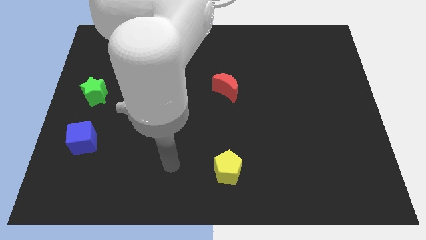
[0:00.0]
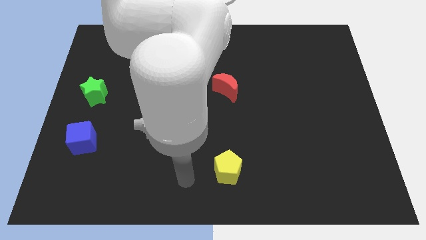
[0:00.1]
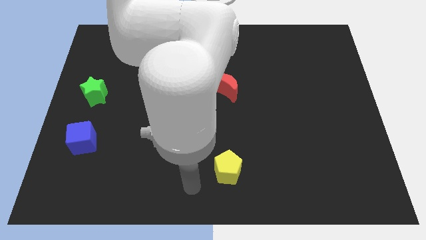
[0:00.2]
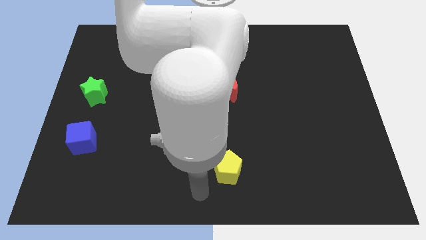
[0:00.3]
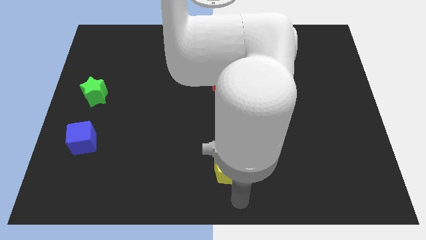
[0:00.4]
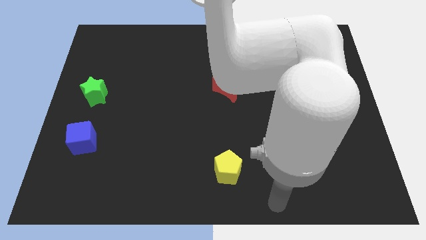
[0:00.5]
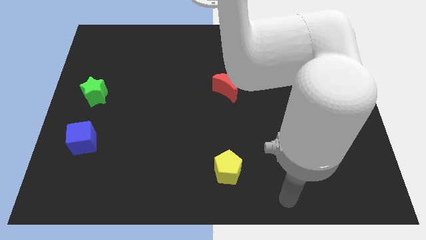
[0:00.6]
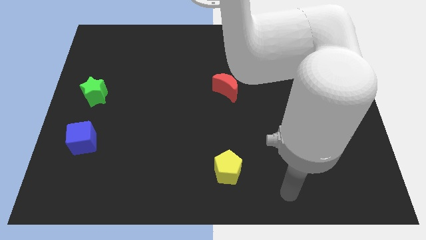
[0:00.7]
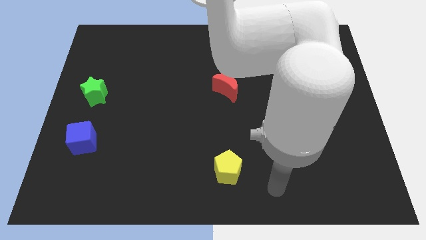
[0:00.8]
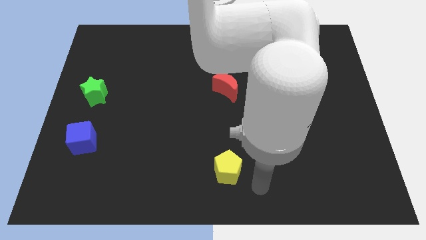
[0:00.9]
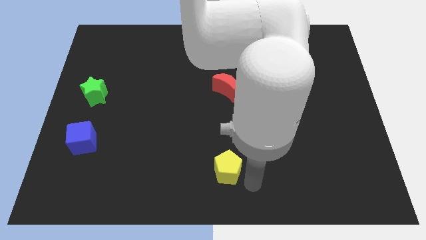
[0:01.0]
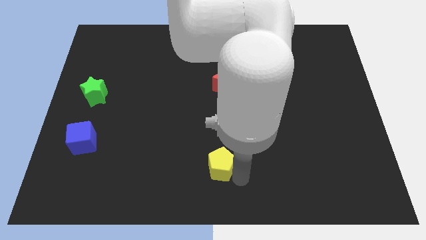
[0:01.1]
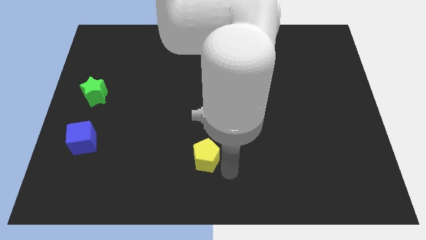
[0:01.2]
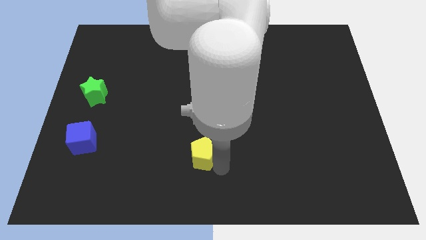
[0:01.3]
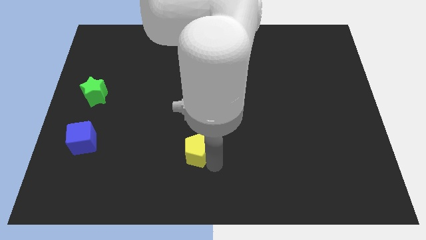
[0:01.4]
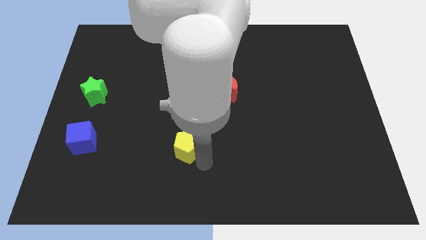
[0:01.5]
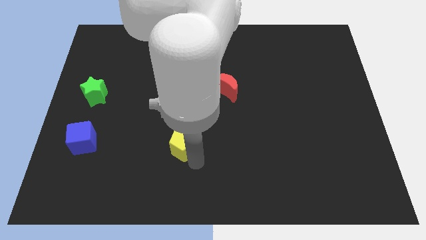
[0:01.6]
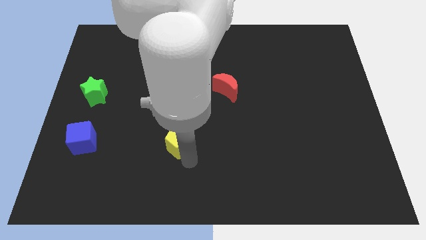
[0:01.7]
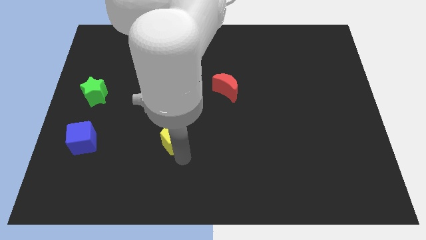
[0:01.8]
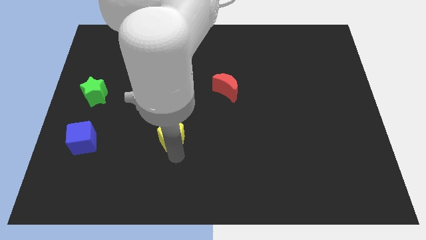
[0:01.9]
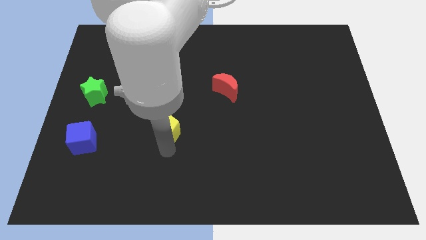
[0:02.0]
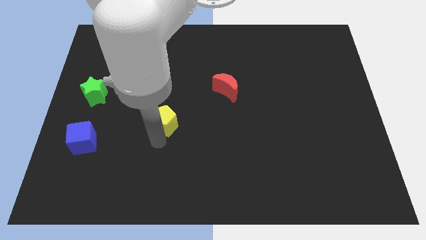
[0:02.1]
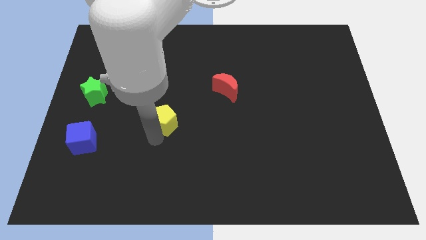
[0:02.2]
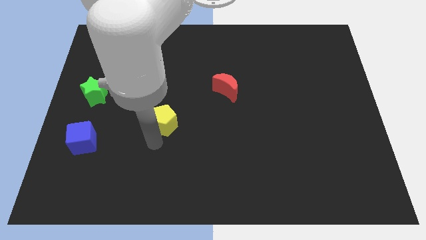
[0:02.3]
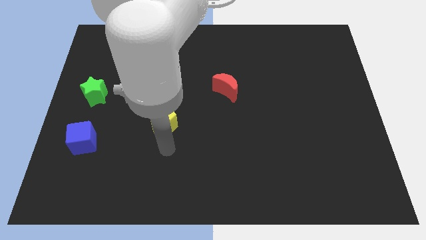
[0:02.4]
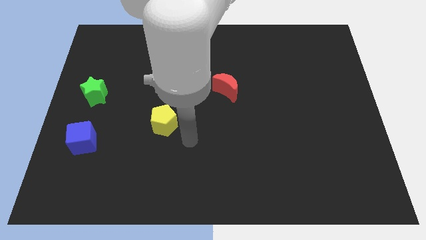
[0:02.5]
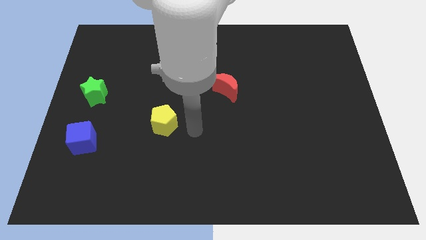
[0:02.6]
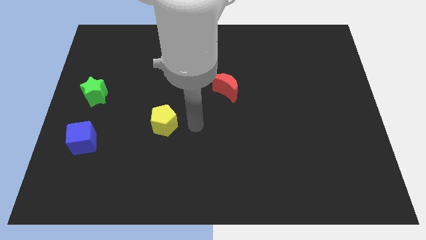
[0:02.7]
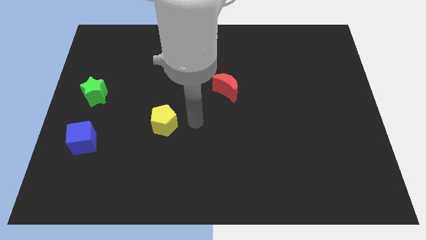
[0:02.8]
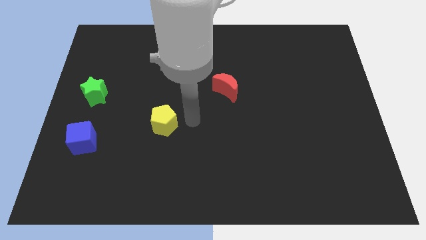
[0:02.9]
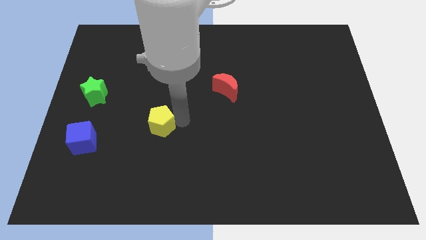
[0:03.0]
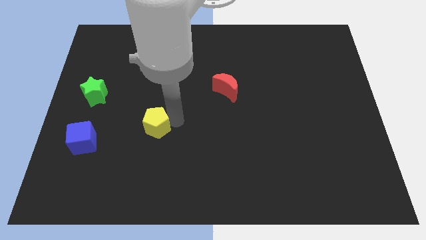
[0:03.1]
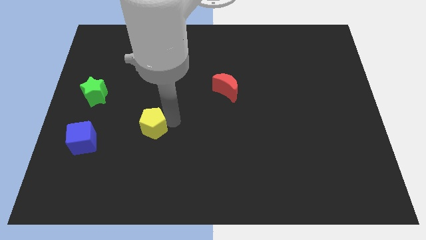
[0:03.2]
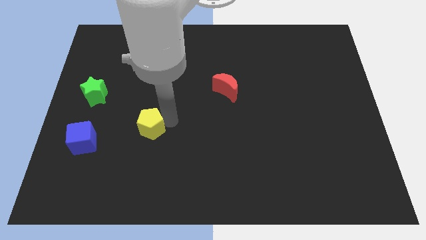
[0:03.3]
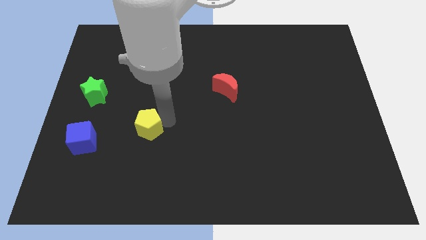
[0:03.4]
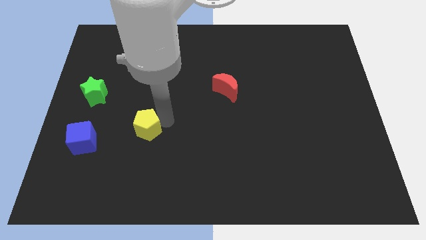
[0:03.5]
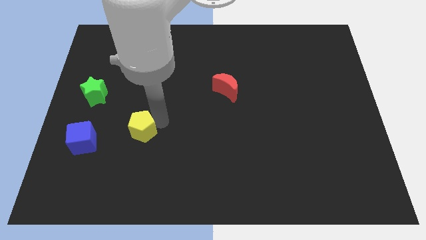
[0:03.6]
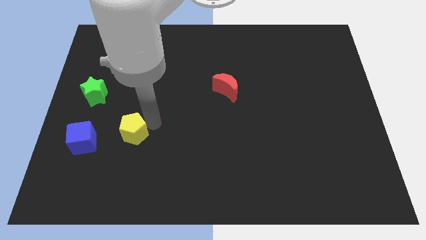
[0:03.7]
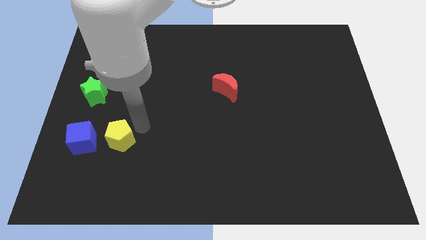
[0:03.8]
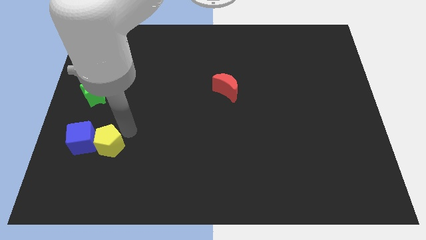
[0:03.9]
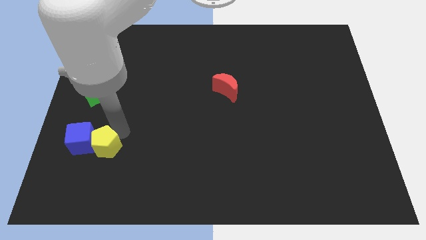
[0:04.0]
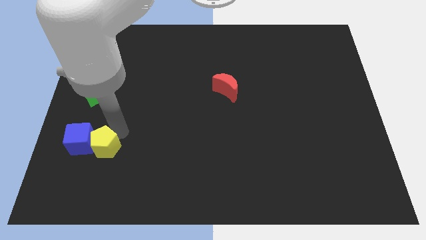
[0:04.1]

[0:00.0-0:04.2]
move the yellow block to the blue cube

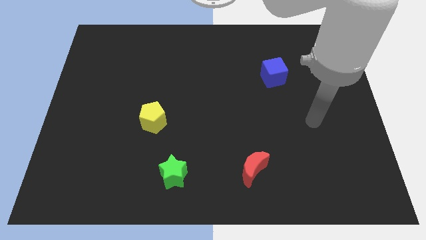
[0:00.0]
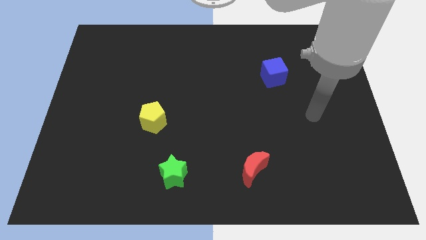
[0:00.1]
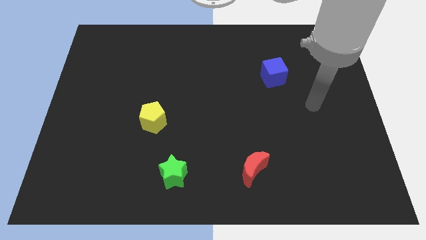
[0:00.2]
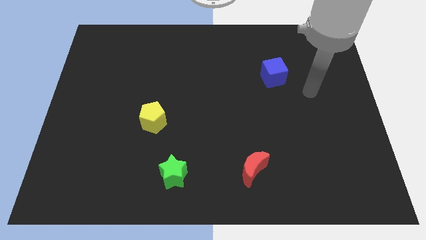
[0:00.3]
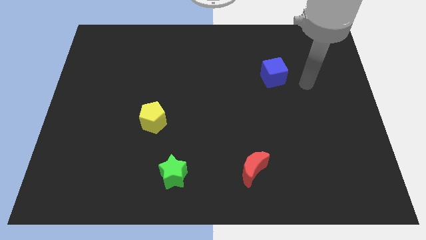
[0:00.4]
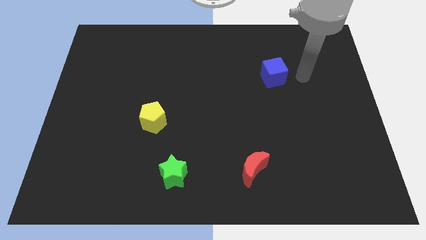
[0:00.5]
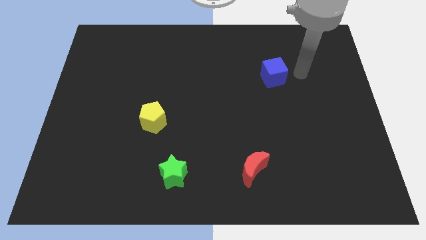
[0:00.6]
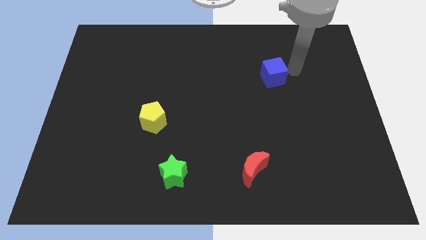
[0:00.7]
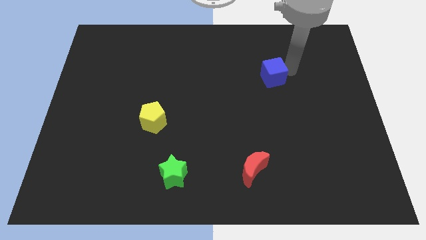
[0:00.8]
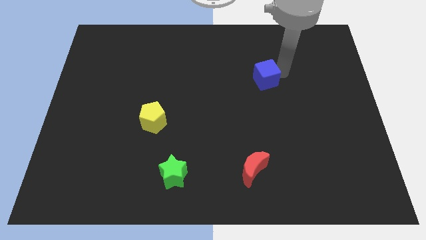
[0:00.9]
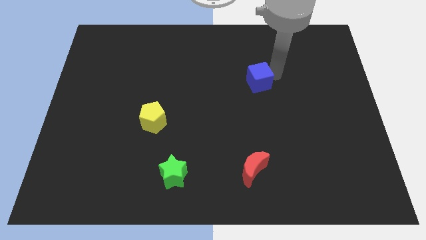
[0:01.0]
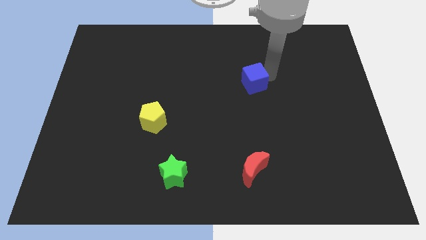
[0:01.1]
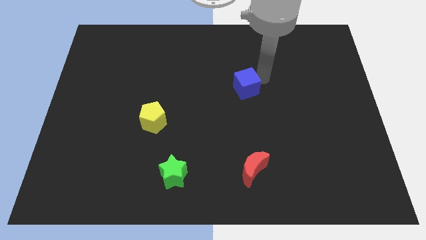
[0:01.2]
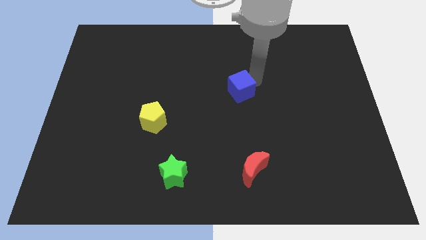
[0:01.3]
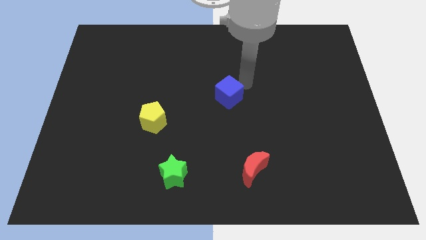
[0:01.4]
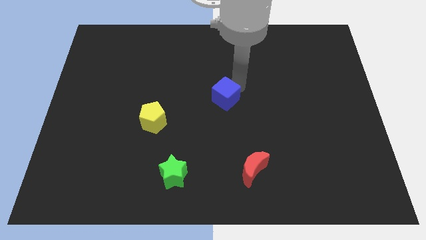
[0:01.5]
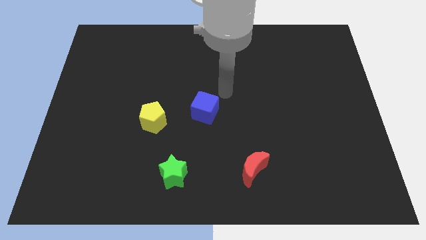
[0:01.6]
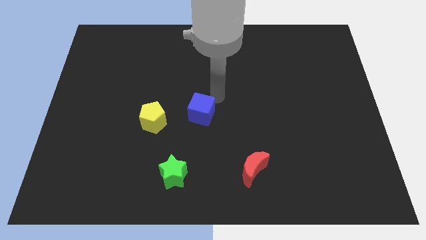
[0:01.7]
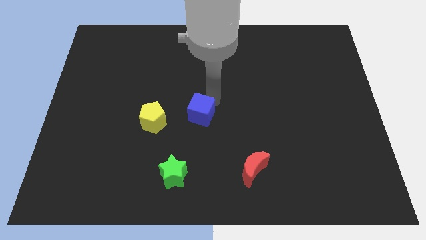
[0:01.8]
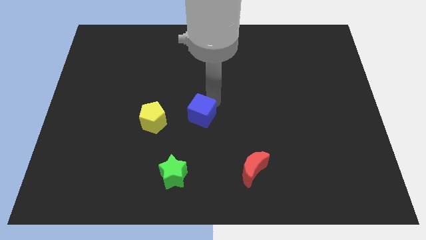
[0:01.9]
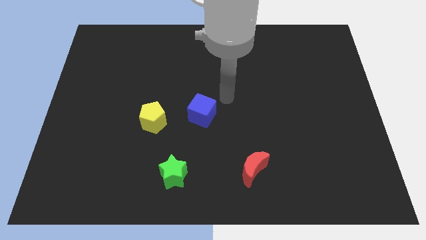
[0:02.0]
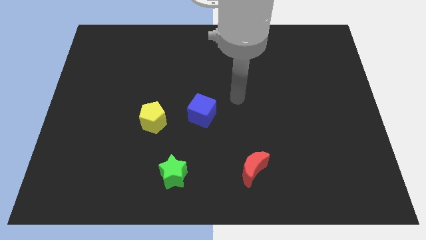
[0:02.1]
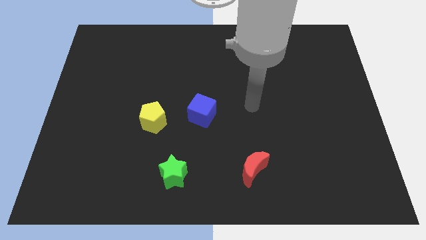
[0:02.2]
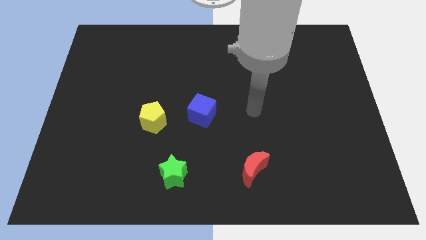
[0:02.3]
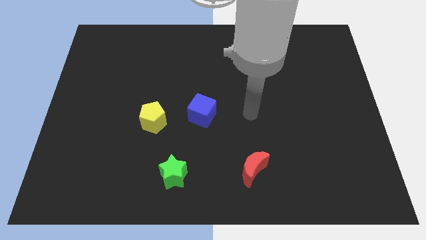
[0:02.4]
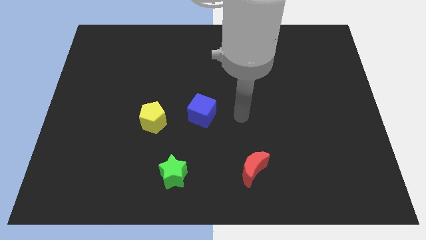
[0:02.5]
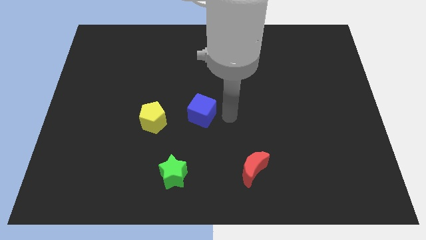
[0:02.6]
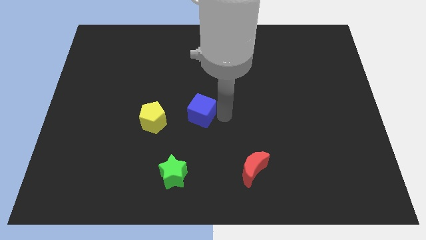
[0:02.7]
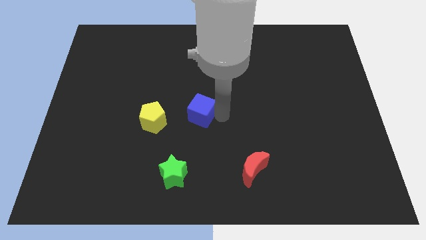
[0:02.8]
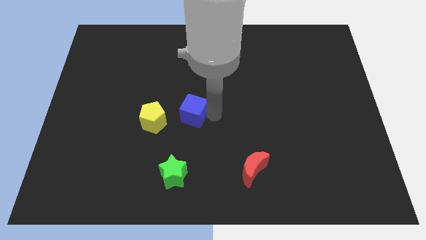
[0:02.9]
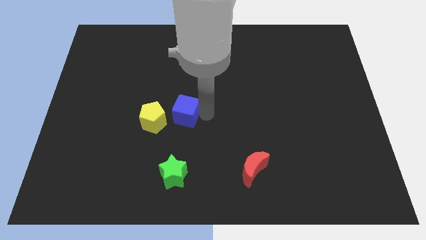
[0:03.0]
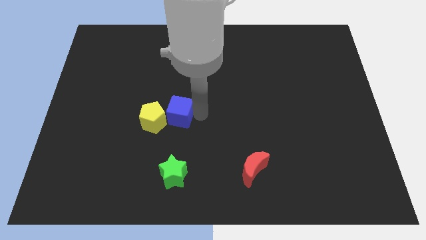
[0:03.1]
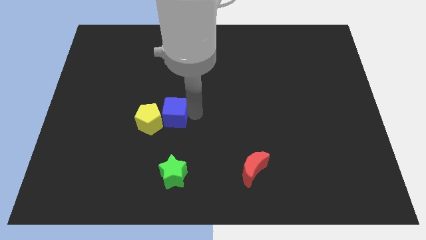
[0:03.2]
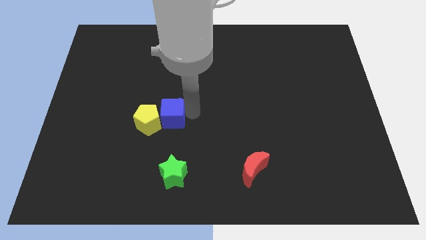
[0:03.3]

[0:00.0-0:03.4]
put the blue cube close to the yellow pentagon

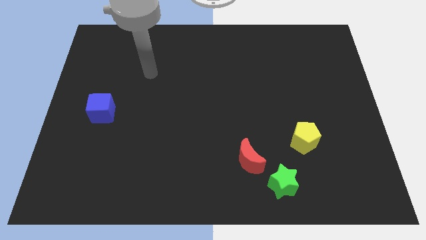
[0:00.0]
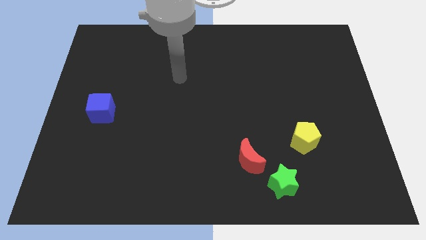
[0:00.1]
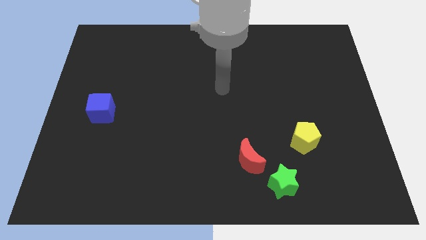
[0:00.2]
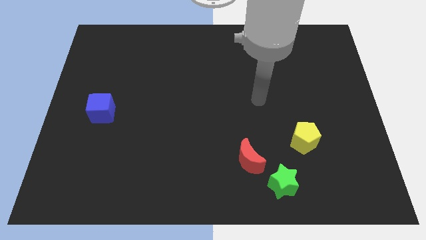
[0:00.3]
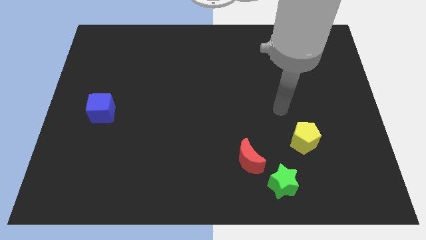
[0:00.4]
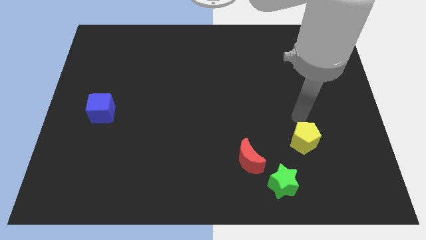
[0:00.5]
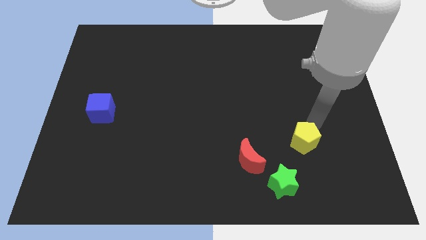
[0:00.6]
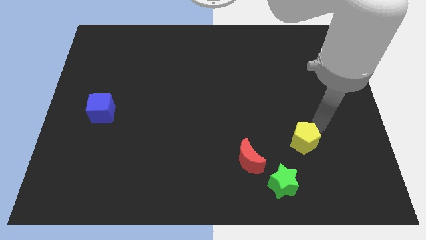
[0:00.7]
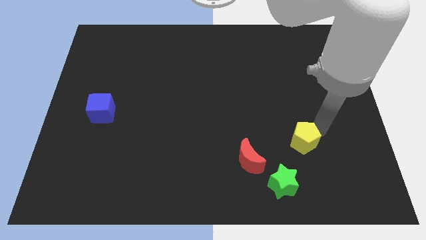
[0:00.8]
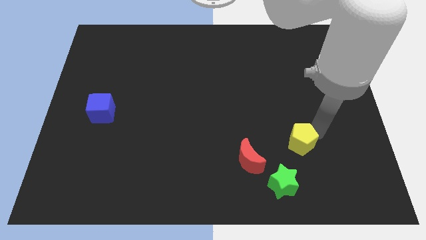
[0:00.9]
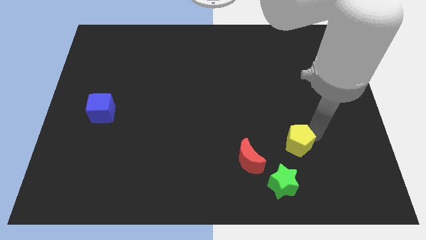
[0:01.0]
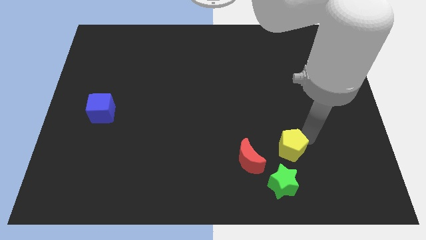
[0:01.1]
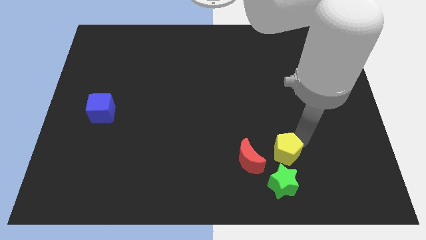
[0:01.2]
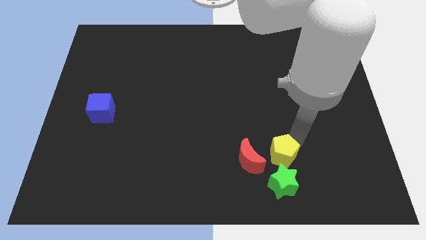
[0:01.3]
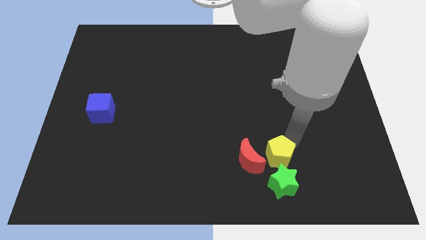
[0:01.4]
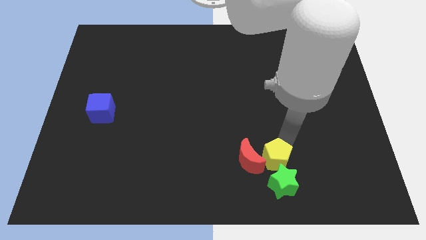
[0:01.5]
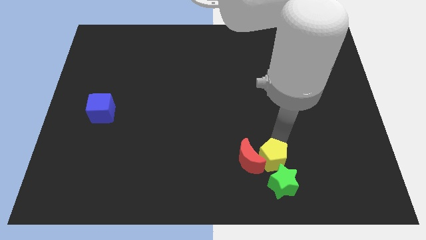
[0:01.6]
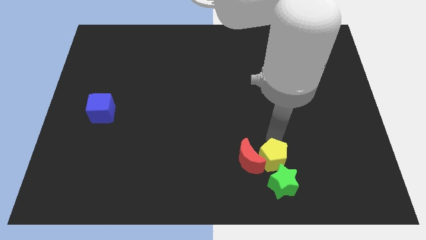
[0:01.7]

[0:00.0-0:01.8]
move the pentagon close to the red block
